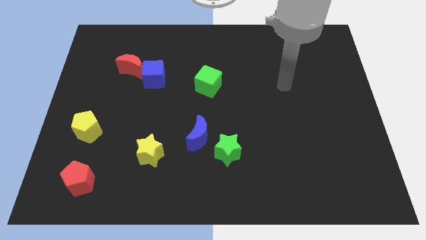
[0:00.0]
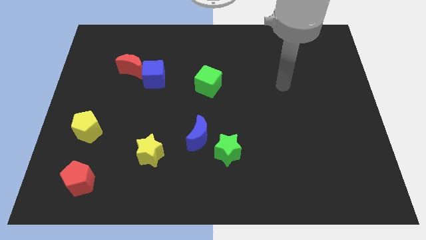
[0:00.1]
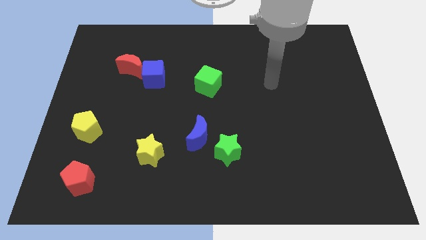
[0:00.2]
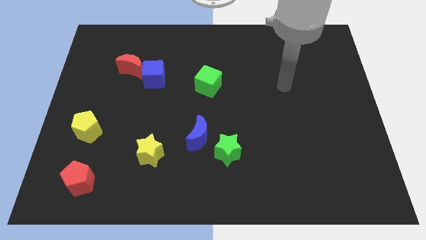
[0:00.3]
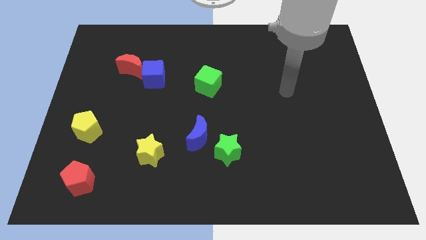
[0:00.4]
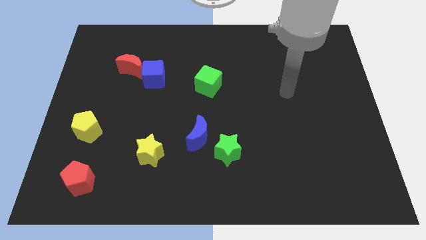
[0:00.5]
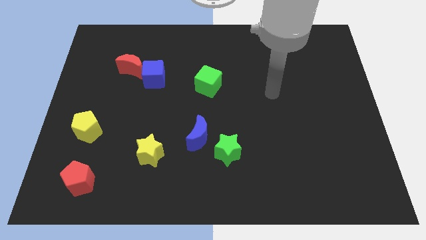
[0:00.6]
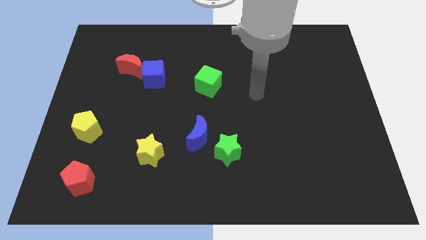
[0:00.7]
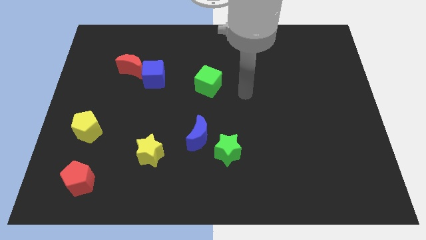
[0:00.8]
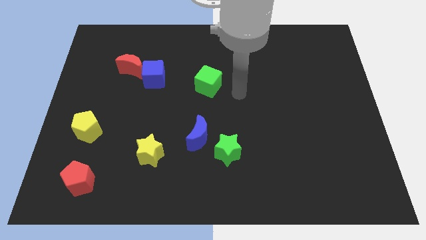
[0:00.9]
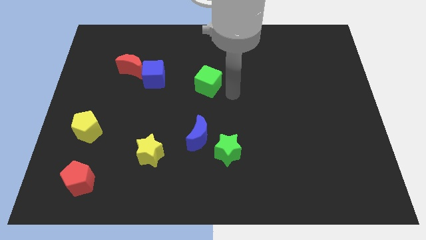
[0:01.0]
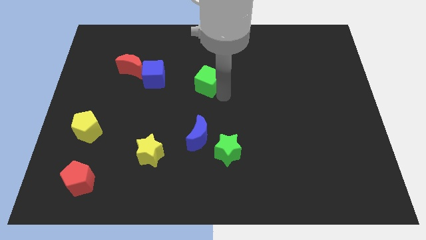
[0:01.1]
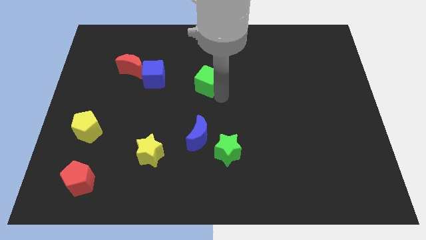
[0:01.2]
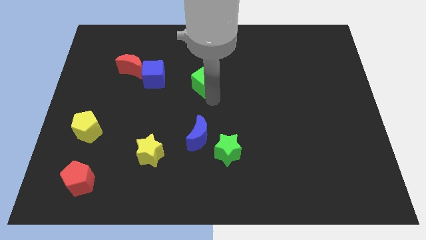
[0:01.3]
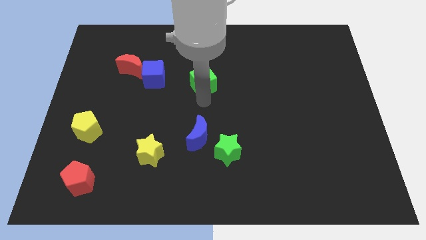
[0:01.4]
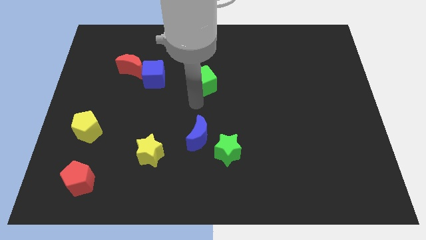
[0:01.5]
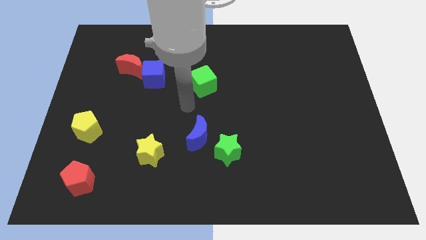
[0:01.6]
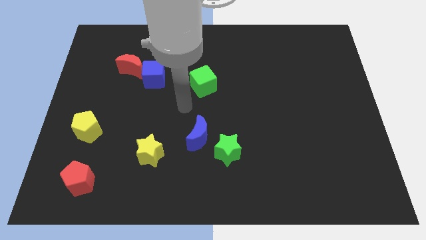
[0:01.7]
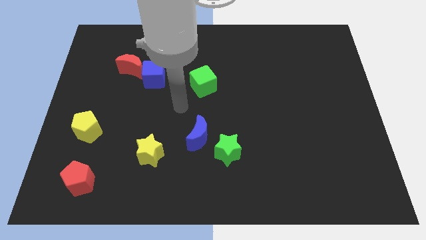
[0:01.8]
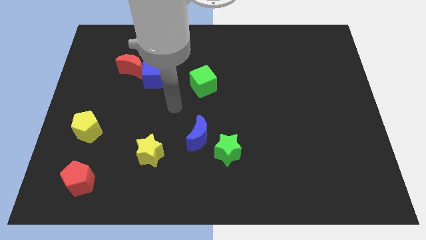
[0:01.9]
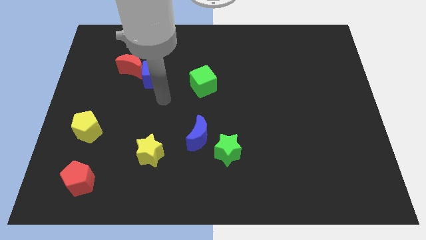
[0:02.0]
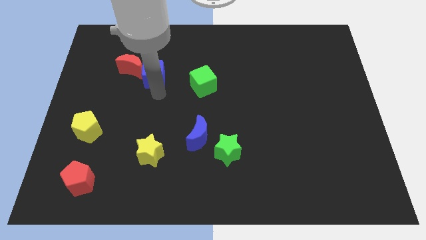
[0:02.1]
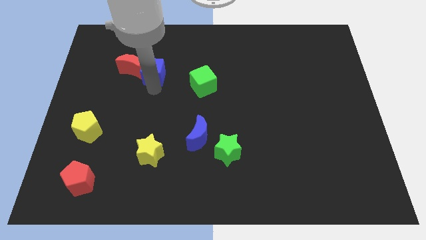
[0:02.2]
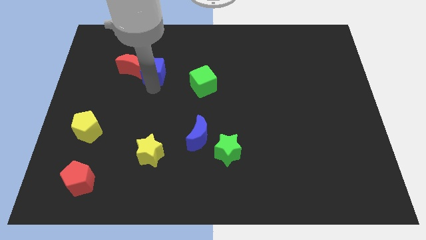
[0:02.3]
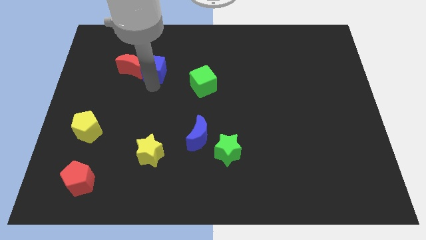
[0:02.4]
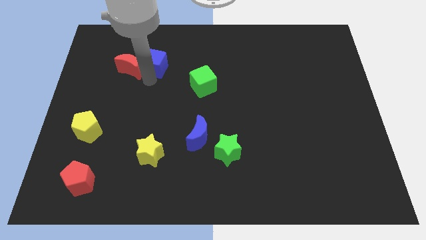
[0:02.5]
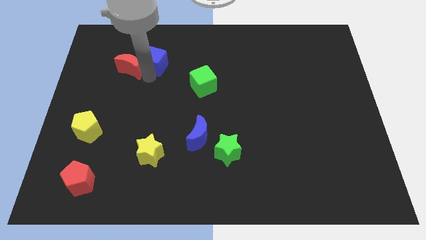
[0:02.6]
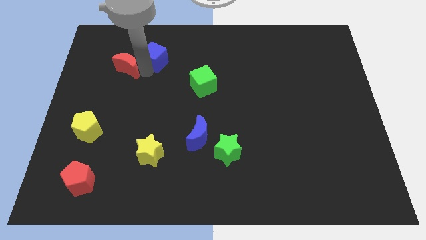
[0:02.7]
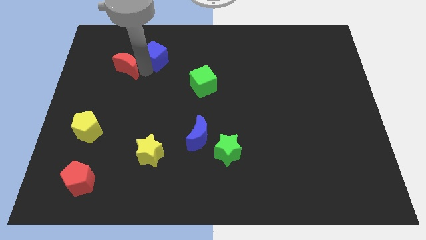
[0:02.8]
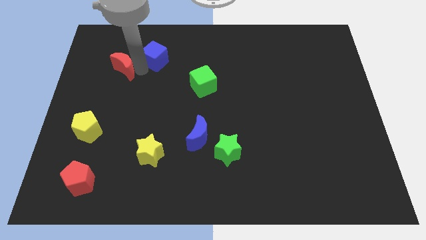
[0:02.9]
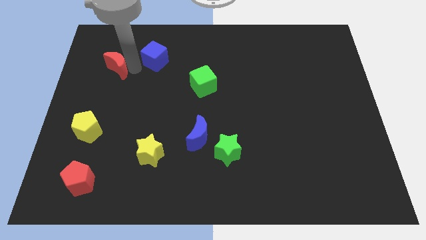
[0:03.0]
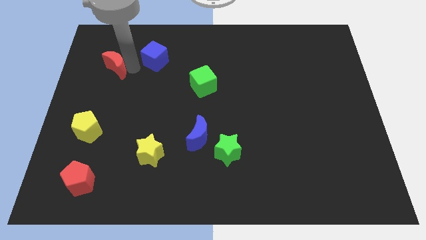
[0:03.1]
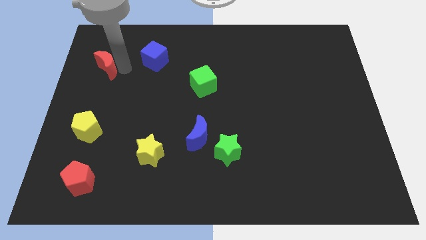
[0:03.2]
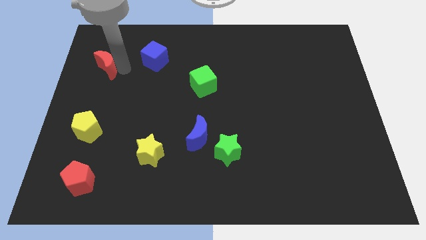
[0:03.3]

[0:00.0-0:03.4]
separate the red moon and the blue cube

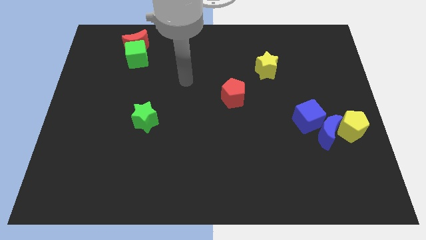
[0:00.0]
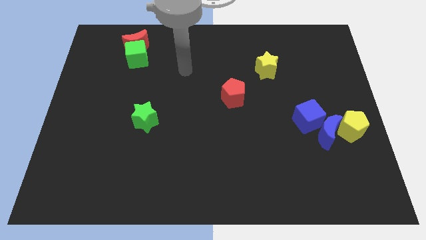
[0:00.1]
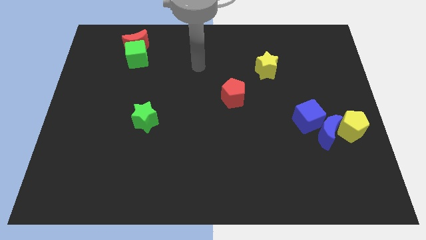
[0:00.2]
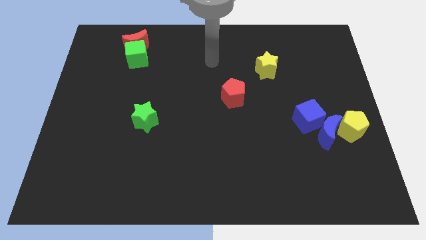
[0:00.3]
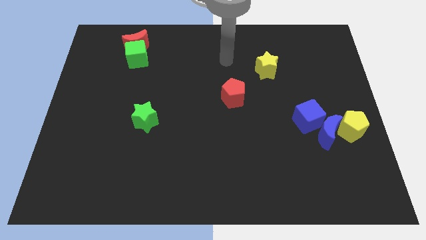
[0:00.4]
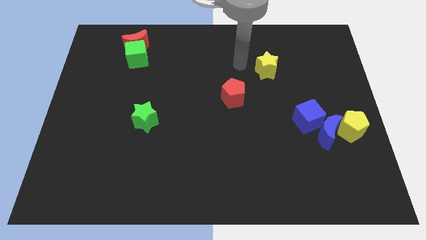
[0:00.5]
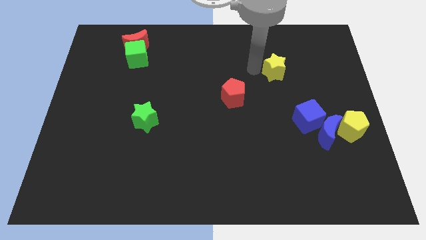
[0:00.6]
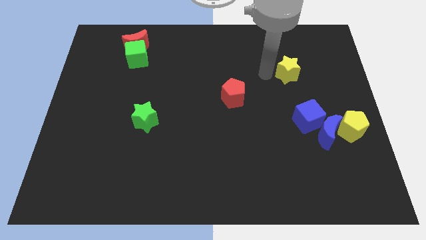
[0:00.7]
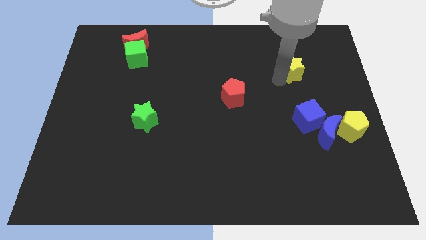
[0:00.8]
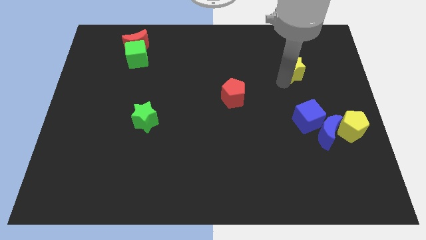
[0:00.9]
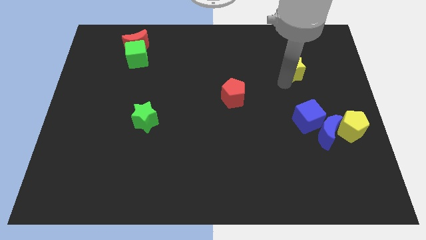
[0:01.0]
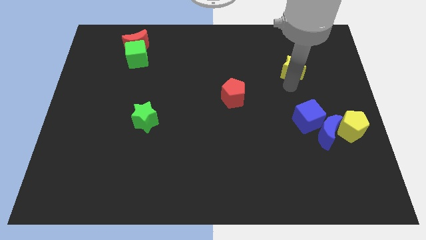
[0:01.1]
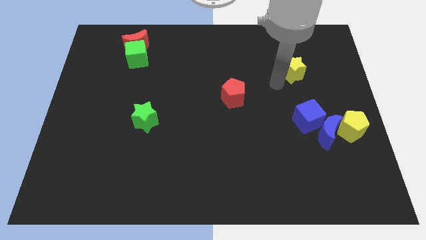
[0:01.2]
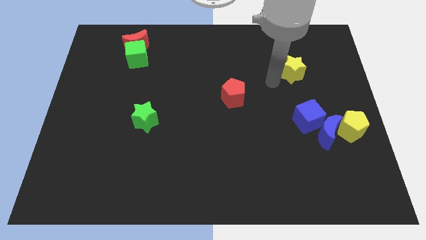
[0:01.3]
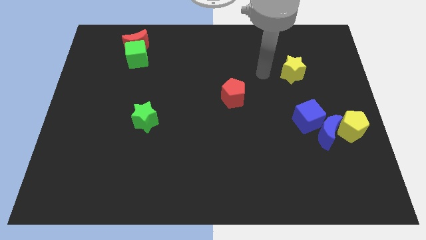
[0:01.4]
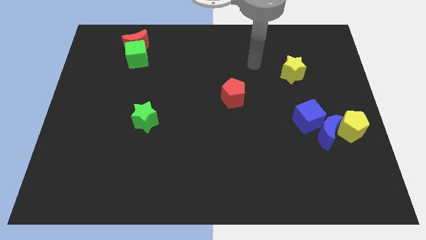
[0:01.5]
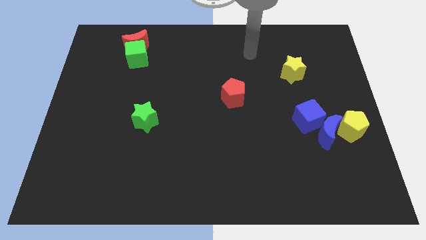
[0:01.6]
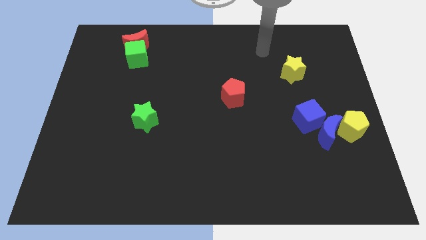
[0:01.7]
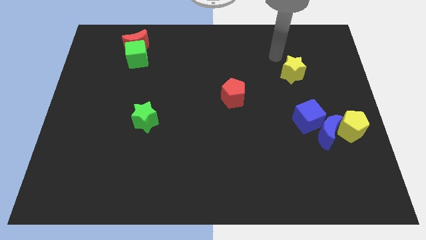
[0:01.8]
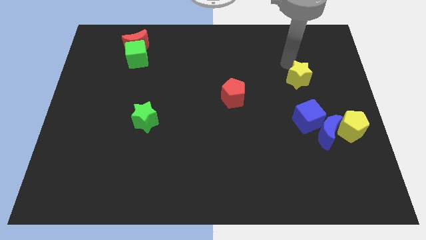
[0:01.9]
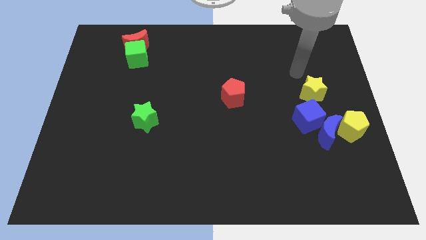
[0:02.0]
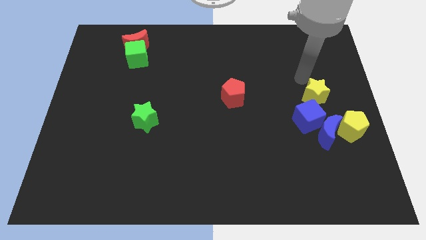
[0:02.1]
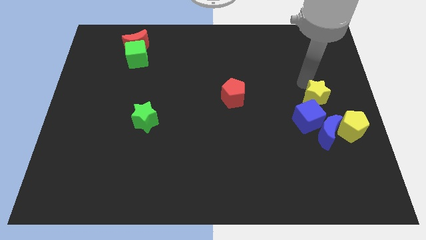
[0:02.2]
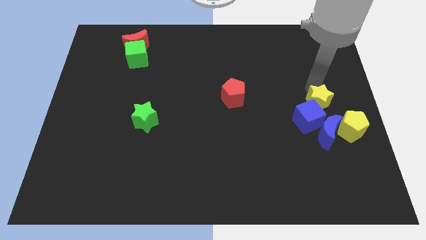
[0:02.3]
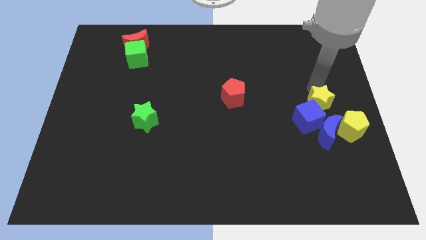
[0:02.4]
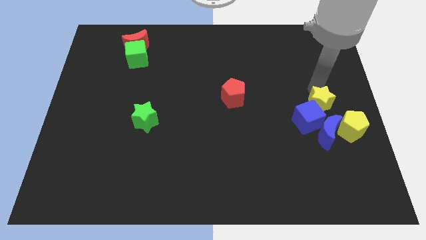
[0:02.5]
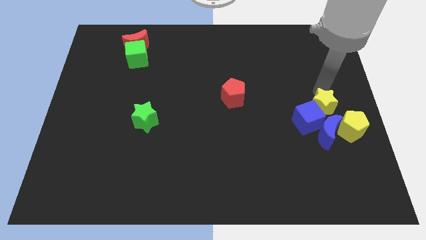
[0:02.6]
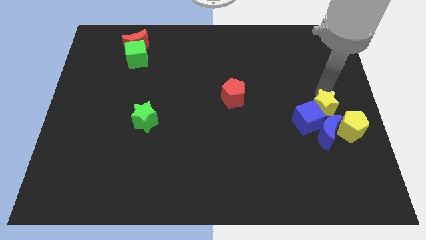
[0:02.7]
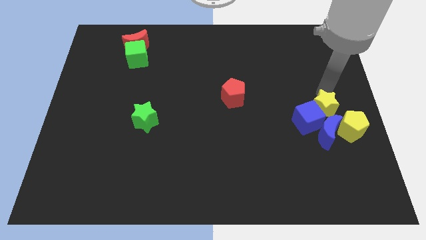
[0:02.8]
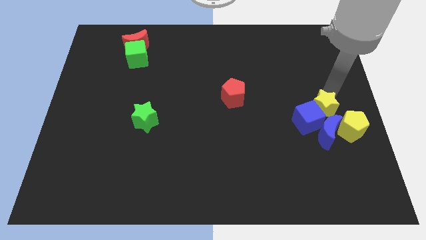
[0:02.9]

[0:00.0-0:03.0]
push the yellow star into the blue cube

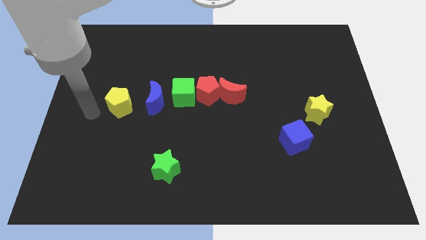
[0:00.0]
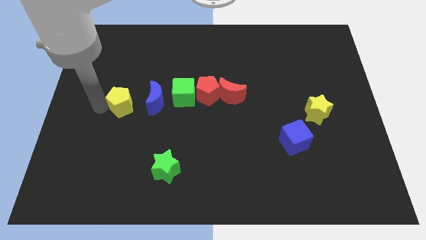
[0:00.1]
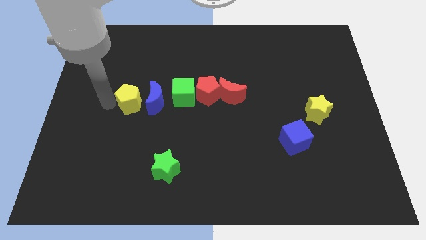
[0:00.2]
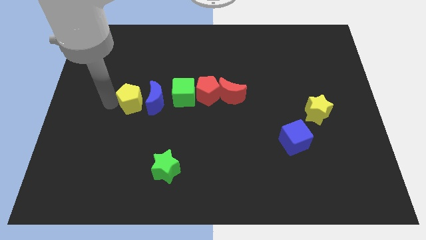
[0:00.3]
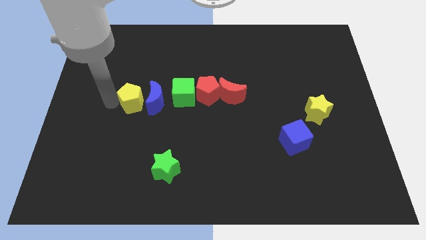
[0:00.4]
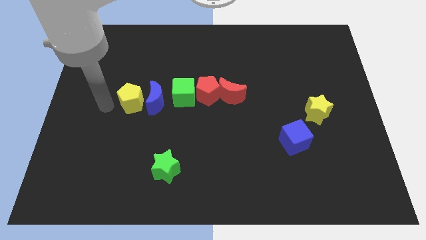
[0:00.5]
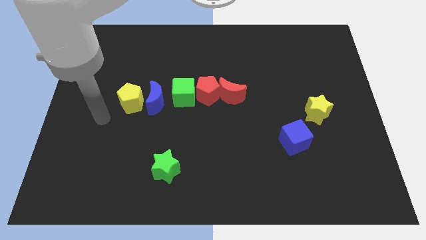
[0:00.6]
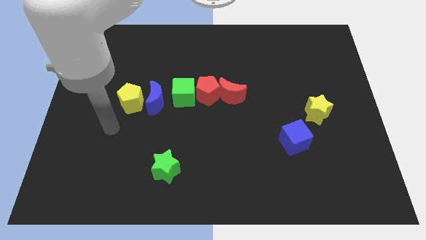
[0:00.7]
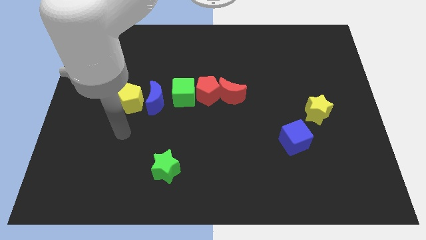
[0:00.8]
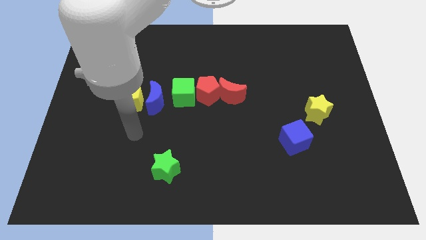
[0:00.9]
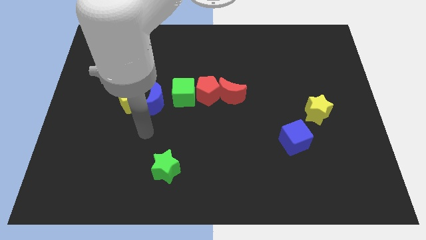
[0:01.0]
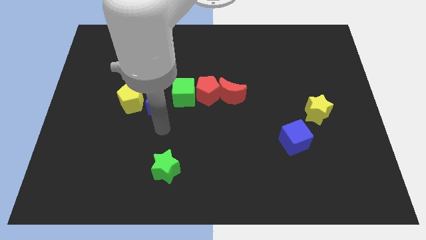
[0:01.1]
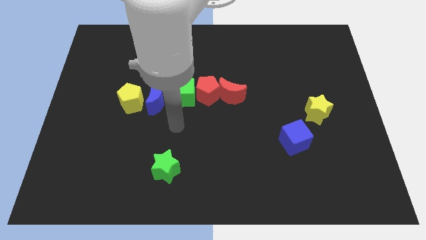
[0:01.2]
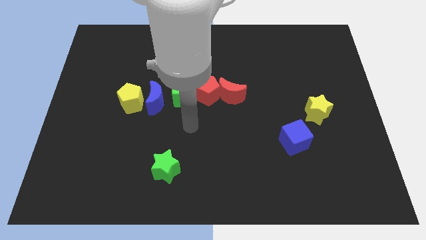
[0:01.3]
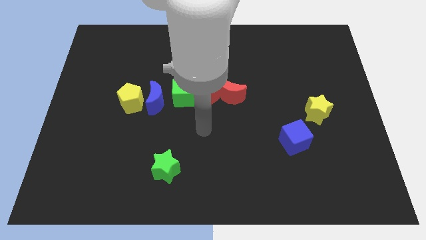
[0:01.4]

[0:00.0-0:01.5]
place the yellow pentagon left of the blue crescent

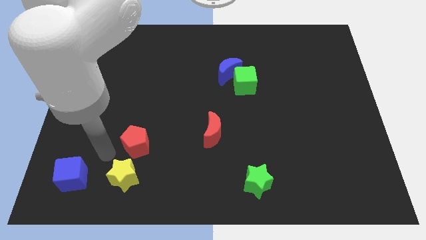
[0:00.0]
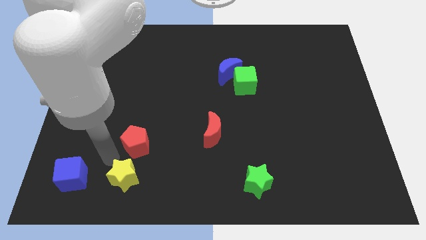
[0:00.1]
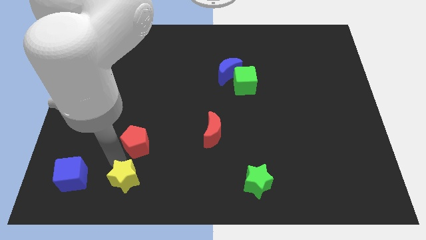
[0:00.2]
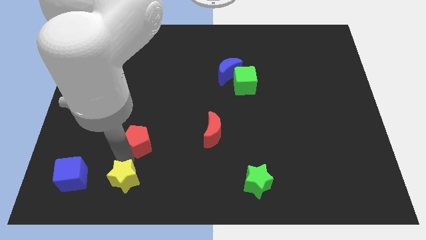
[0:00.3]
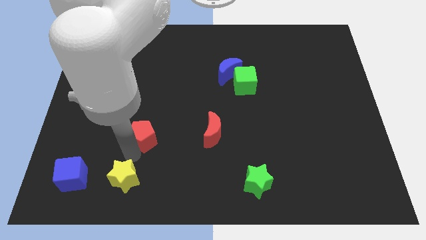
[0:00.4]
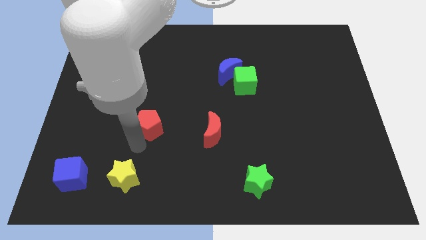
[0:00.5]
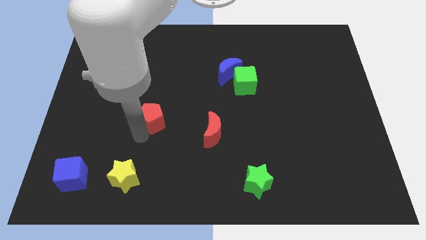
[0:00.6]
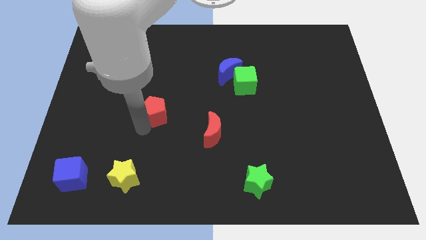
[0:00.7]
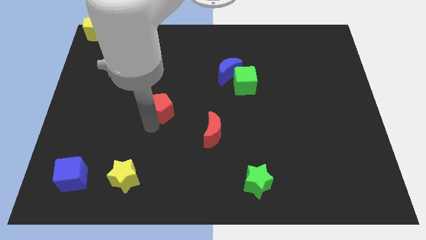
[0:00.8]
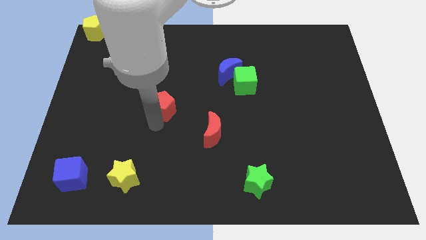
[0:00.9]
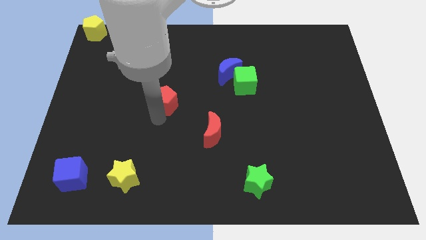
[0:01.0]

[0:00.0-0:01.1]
separate red pentagon from yellow star
